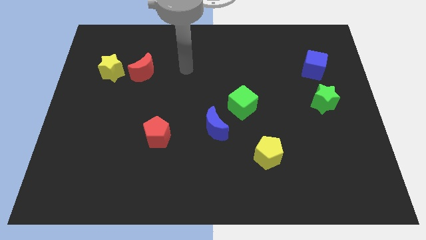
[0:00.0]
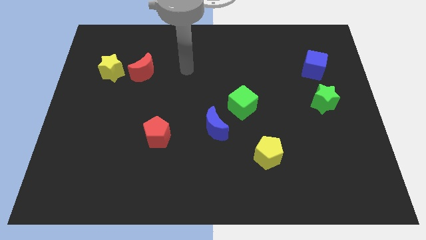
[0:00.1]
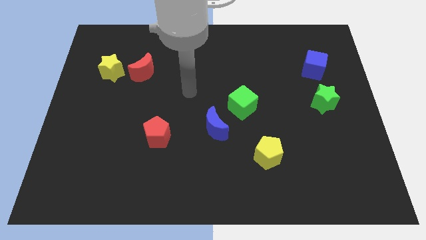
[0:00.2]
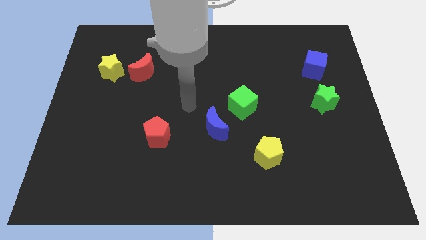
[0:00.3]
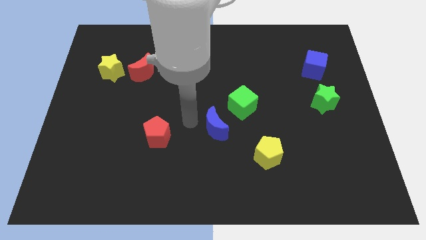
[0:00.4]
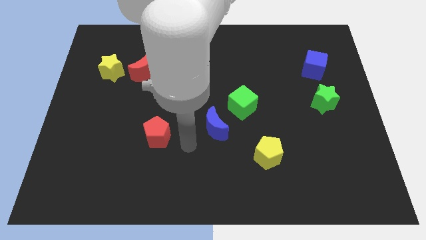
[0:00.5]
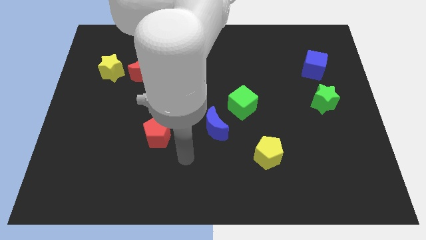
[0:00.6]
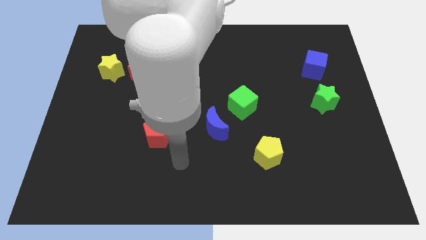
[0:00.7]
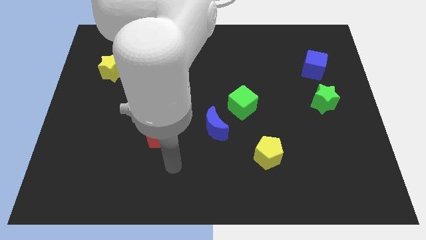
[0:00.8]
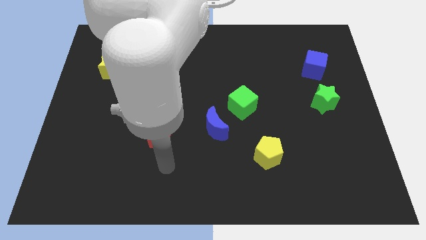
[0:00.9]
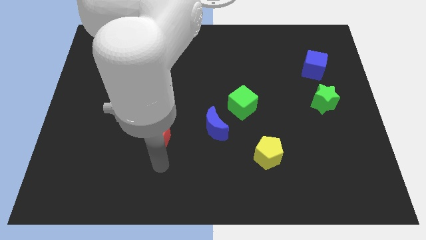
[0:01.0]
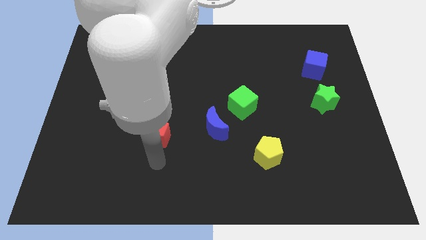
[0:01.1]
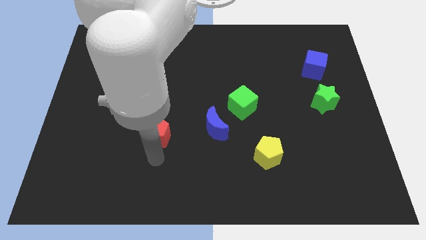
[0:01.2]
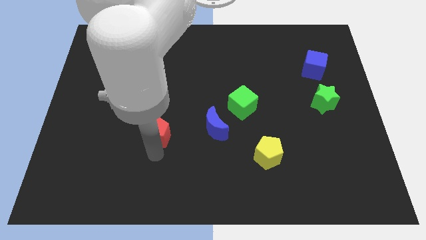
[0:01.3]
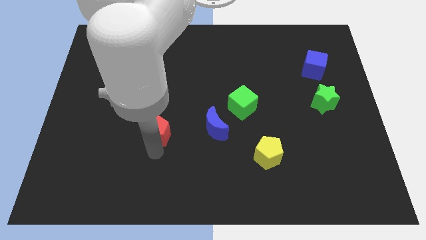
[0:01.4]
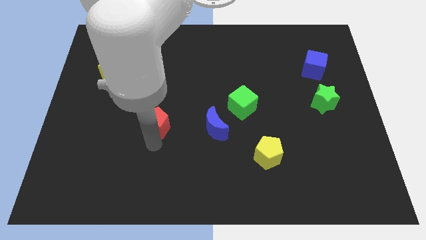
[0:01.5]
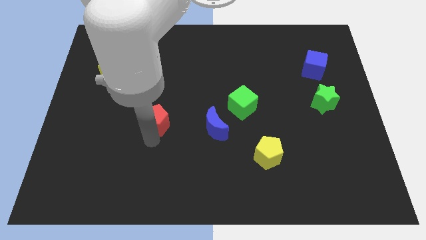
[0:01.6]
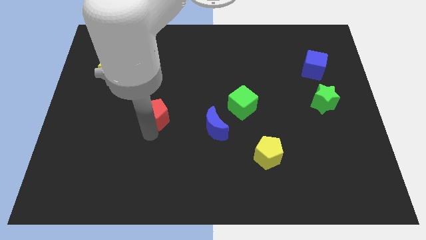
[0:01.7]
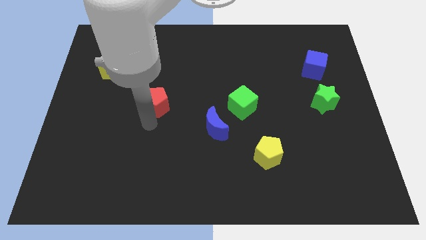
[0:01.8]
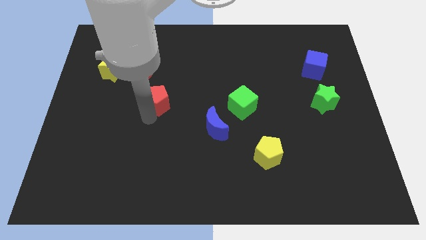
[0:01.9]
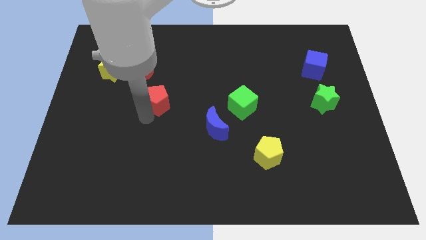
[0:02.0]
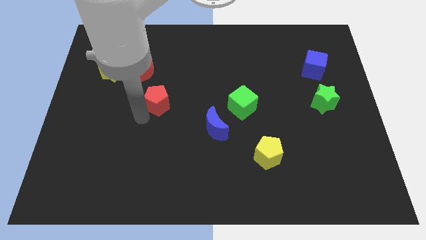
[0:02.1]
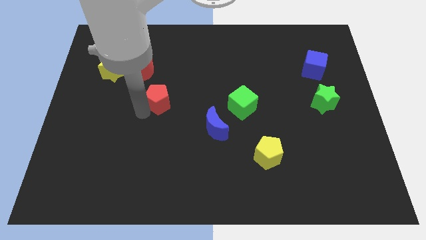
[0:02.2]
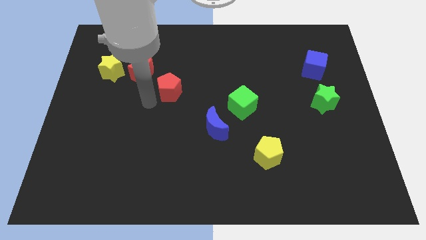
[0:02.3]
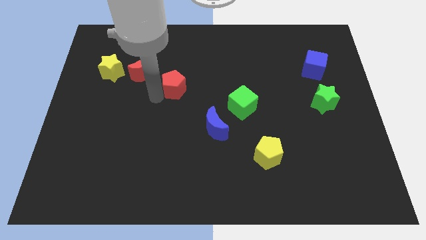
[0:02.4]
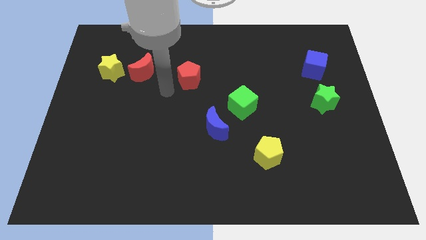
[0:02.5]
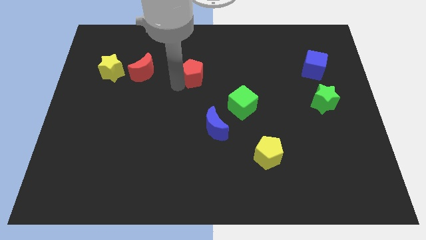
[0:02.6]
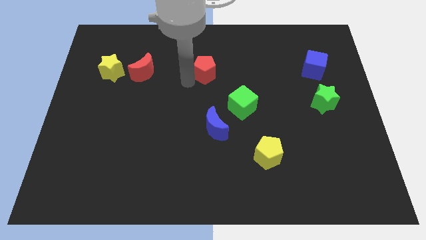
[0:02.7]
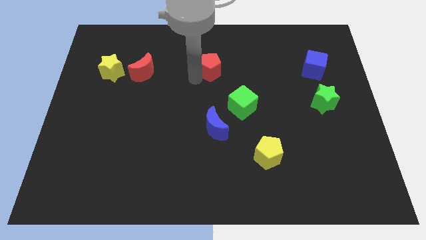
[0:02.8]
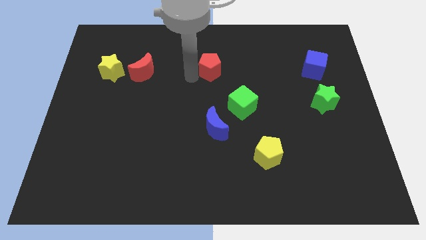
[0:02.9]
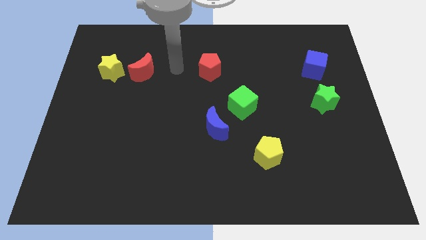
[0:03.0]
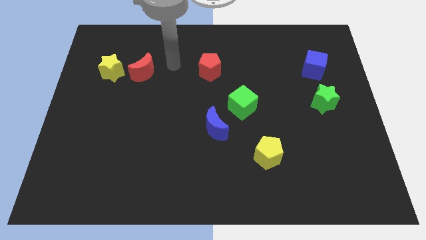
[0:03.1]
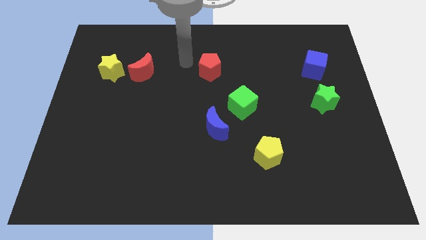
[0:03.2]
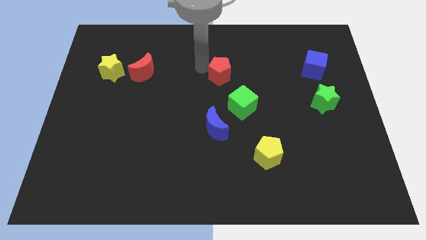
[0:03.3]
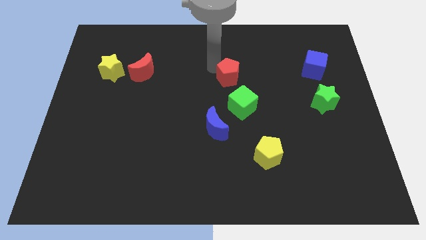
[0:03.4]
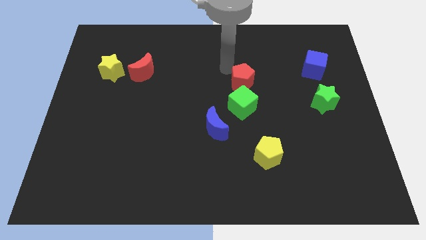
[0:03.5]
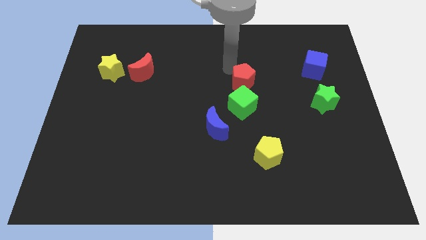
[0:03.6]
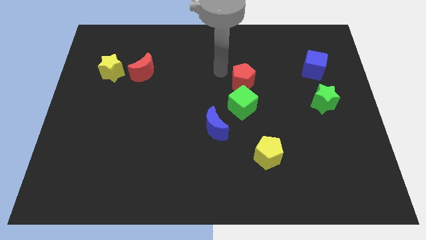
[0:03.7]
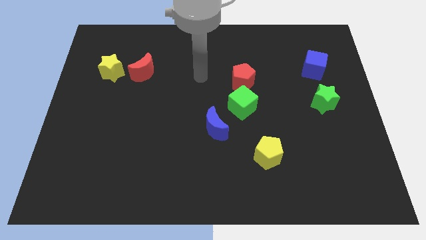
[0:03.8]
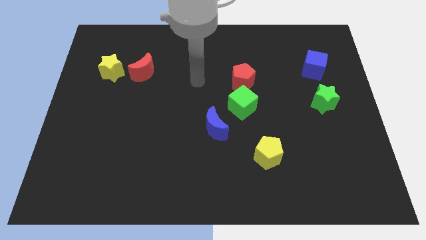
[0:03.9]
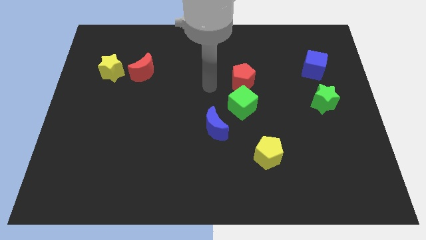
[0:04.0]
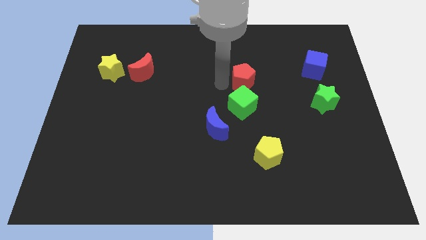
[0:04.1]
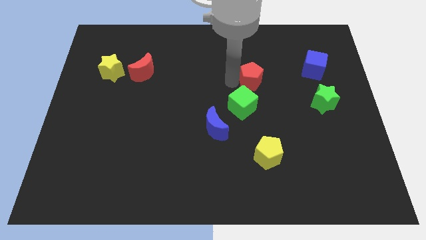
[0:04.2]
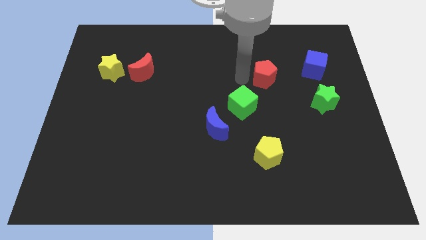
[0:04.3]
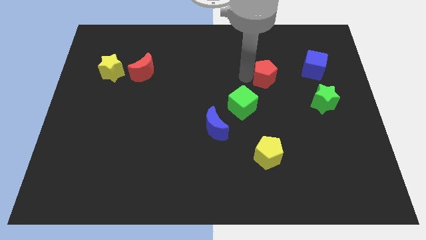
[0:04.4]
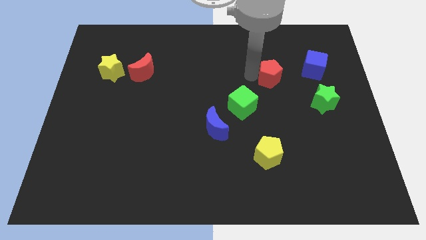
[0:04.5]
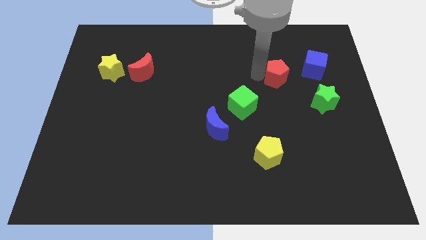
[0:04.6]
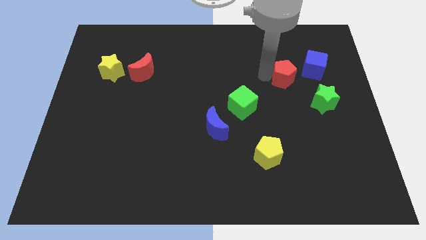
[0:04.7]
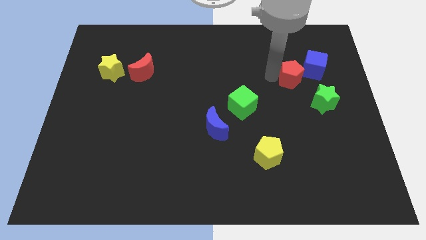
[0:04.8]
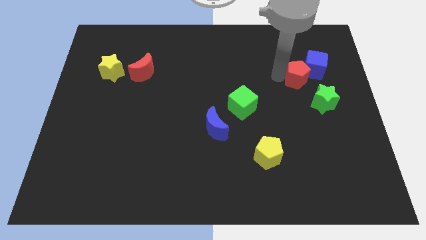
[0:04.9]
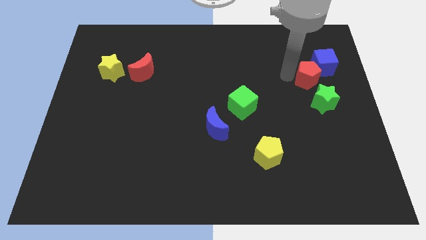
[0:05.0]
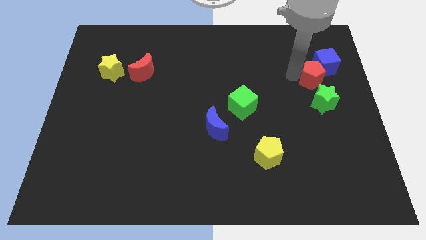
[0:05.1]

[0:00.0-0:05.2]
slide the red pentagon towards the blue cube

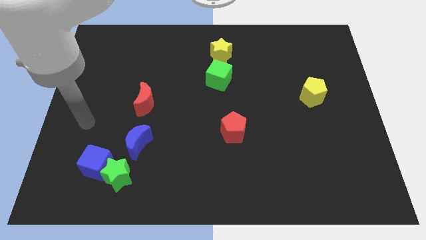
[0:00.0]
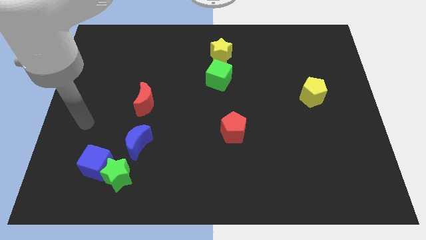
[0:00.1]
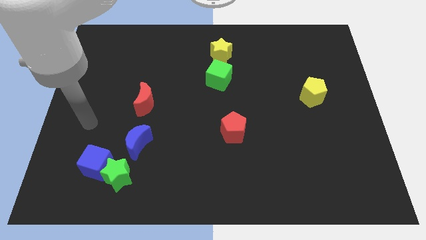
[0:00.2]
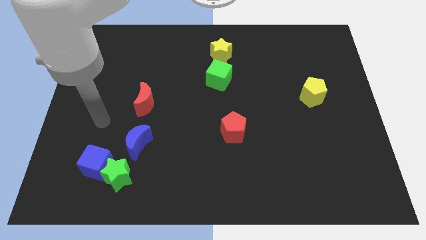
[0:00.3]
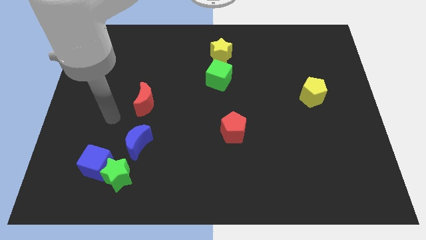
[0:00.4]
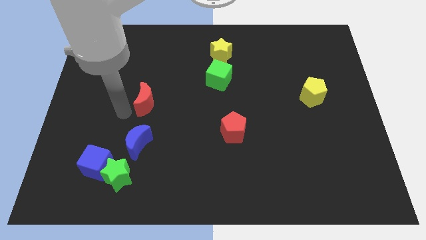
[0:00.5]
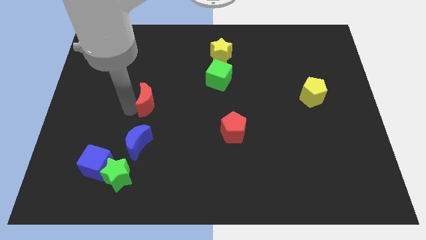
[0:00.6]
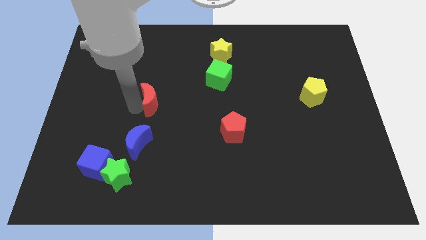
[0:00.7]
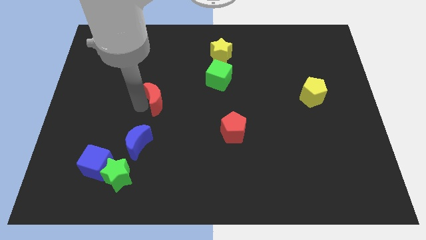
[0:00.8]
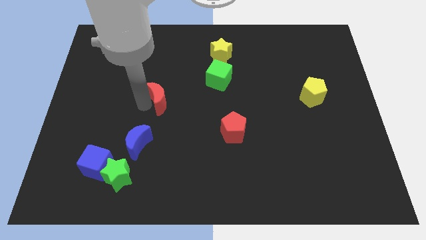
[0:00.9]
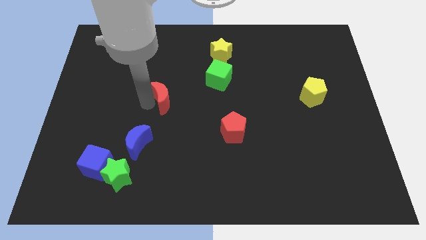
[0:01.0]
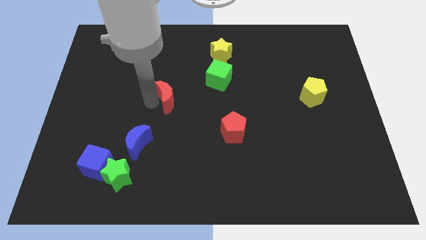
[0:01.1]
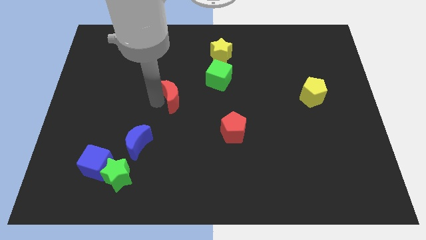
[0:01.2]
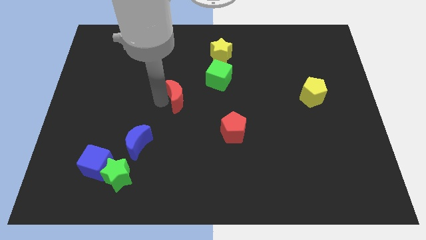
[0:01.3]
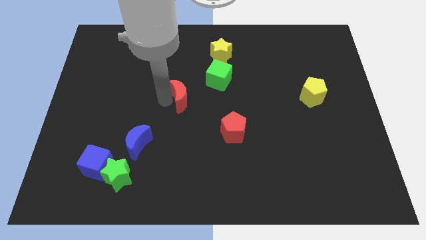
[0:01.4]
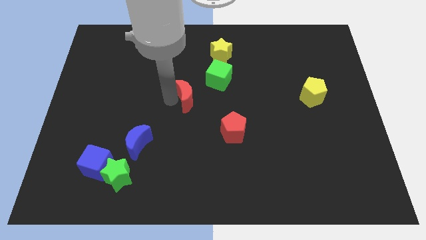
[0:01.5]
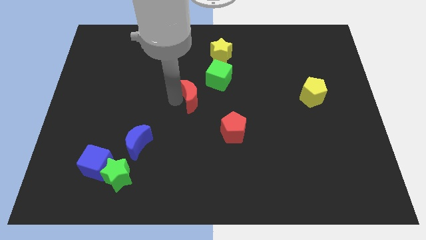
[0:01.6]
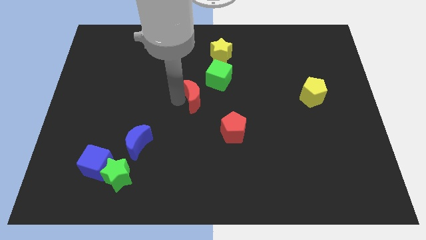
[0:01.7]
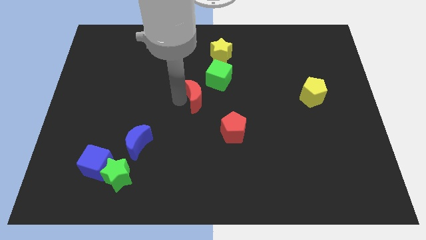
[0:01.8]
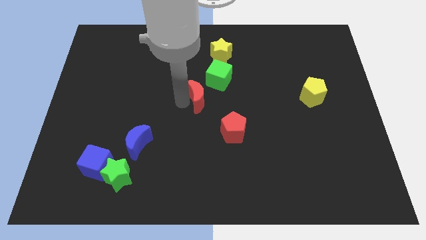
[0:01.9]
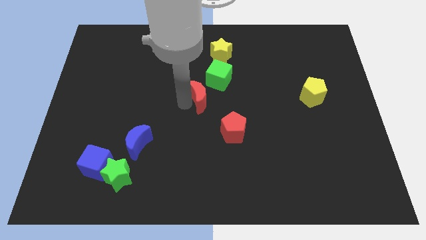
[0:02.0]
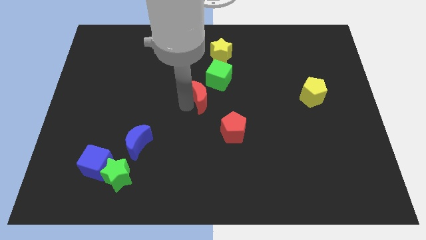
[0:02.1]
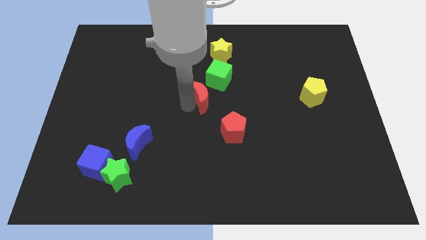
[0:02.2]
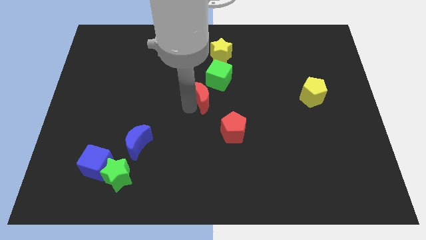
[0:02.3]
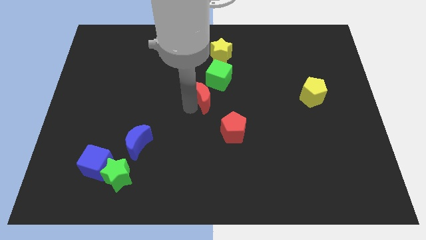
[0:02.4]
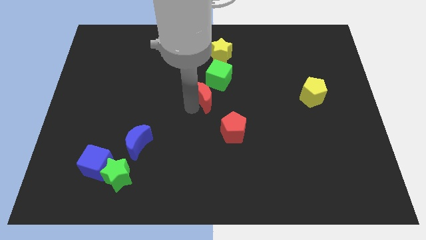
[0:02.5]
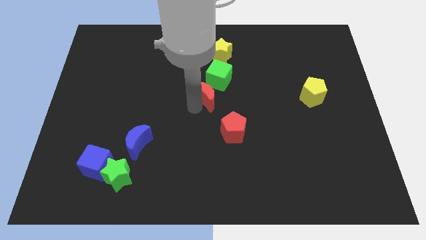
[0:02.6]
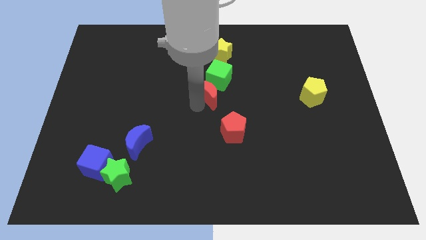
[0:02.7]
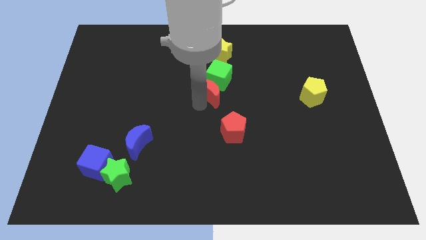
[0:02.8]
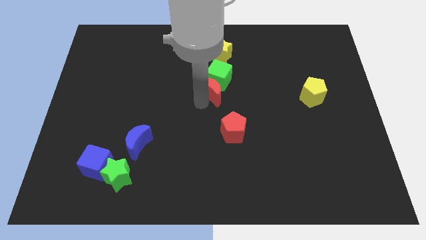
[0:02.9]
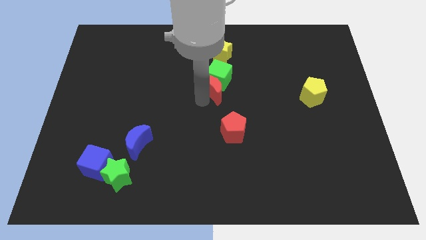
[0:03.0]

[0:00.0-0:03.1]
slide the red moon to the green cube

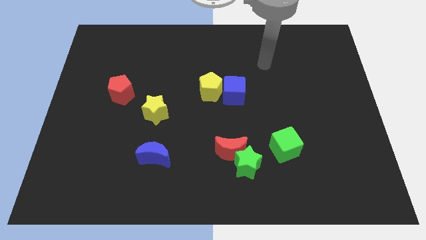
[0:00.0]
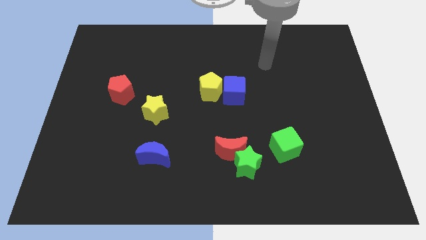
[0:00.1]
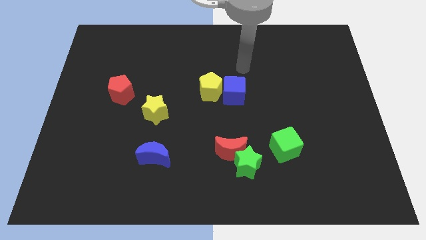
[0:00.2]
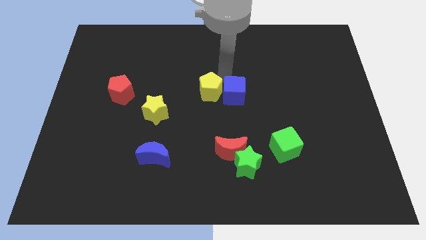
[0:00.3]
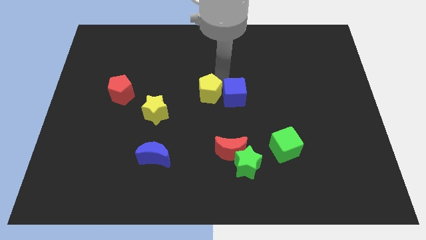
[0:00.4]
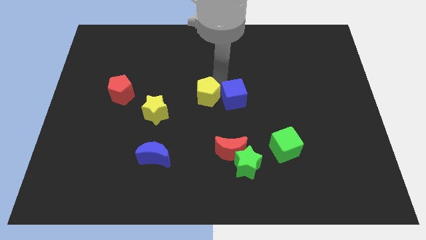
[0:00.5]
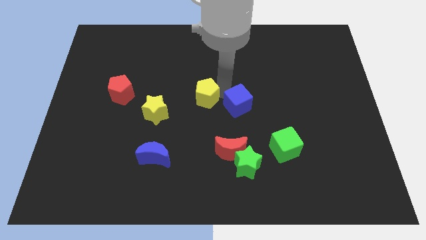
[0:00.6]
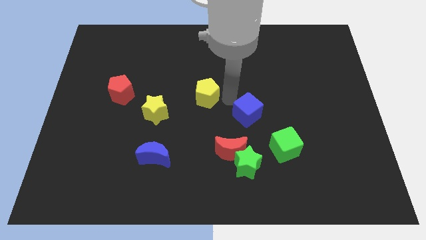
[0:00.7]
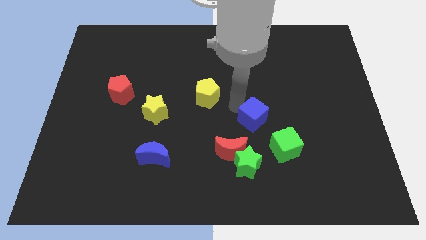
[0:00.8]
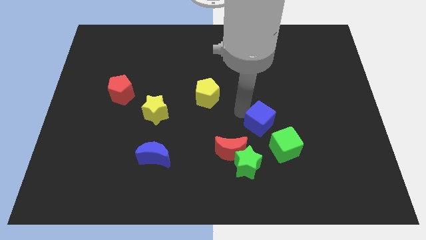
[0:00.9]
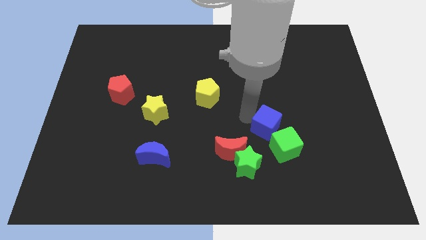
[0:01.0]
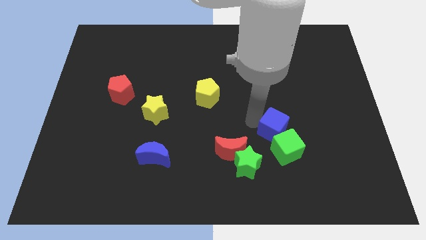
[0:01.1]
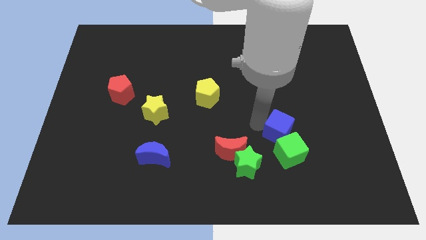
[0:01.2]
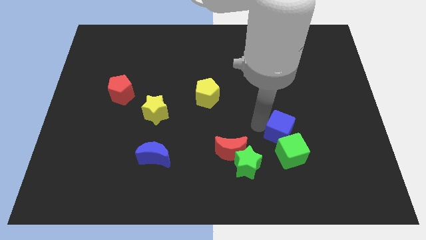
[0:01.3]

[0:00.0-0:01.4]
move the blue cube next to the green cube
